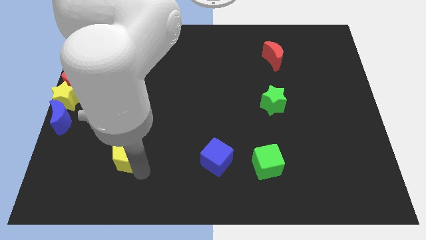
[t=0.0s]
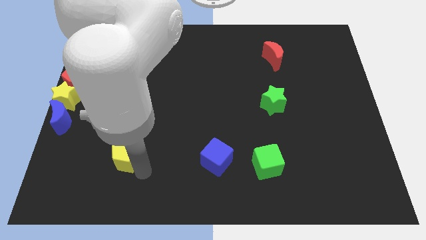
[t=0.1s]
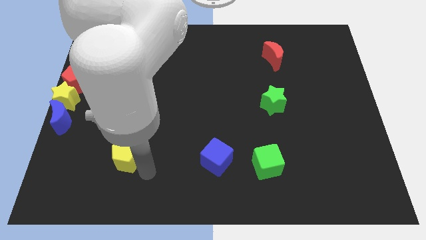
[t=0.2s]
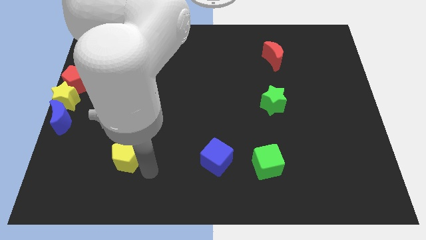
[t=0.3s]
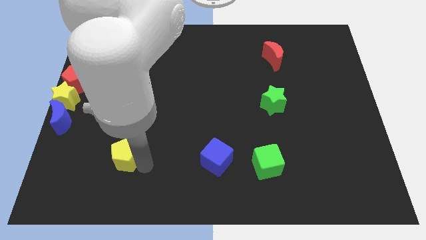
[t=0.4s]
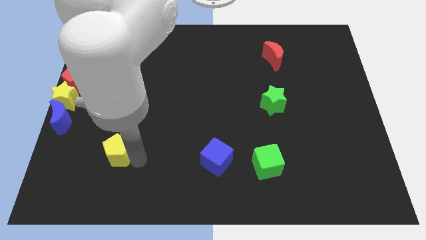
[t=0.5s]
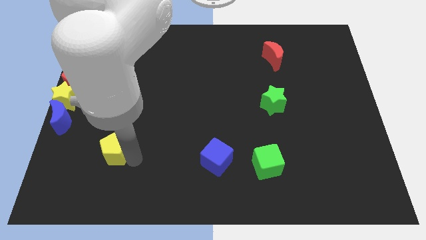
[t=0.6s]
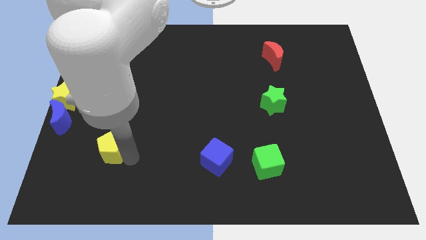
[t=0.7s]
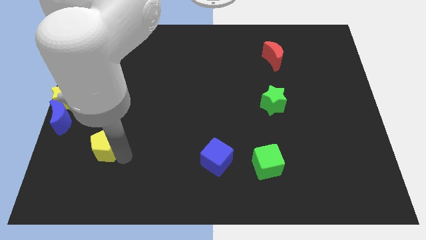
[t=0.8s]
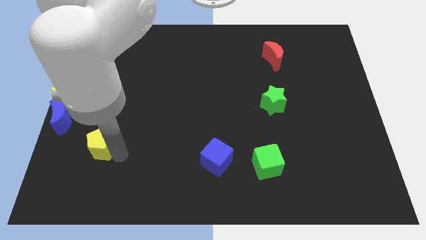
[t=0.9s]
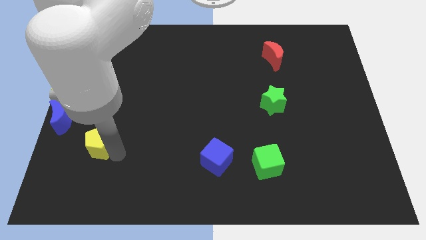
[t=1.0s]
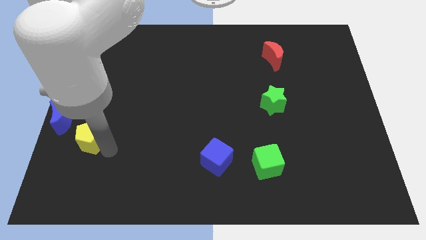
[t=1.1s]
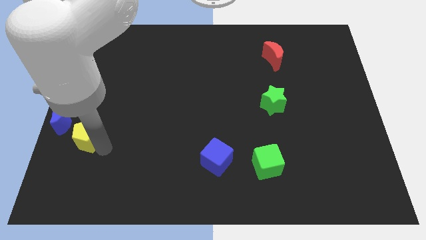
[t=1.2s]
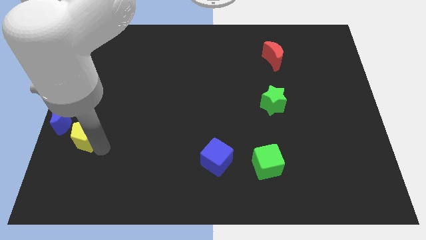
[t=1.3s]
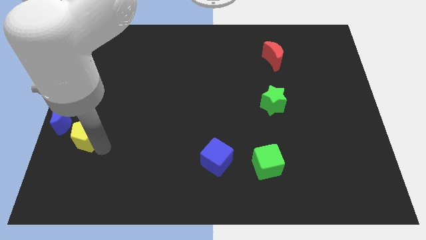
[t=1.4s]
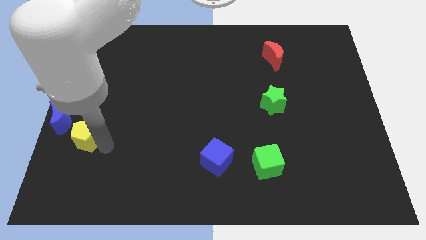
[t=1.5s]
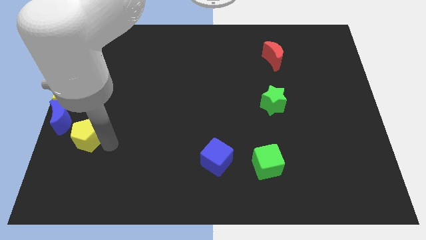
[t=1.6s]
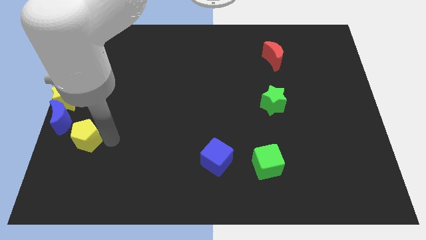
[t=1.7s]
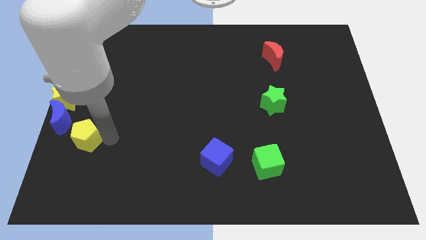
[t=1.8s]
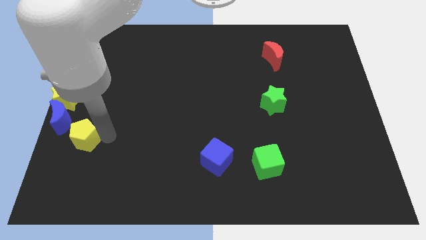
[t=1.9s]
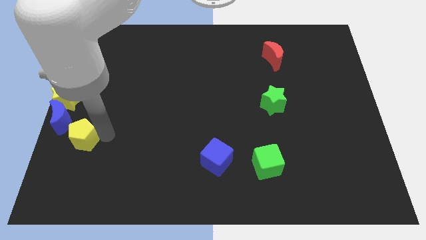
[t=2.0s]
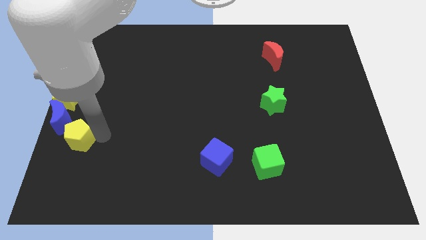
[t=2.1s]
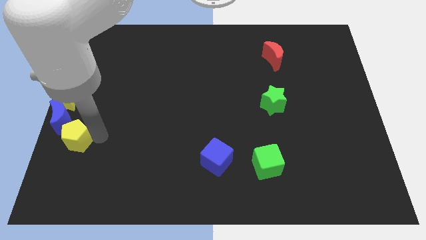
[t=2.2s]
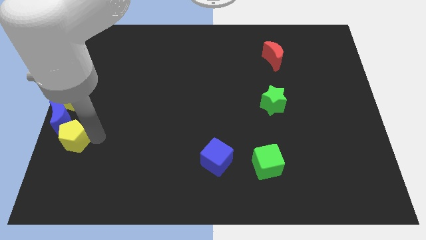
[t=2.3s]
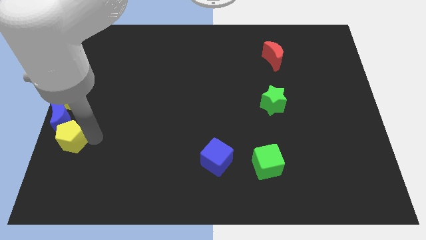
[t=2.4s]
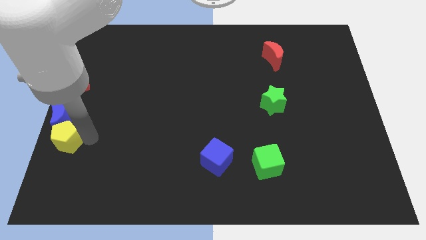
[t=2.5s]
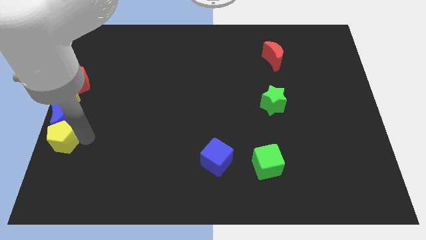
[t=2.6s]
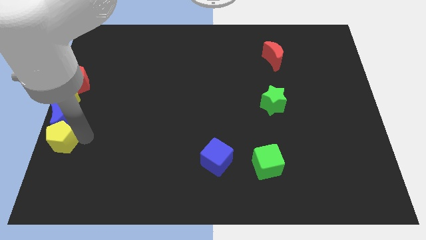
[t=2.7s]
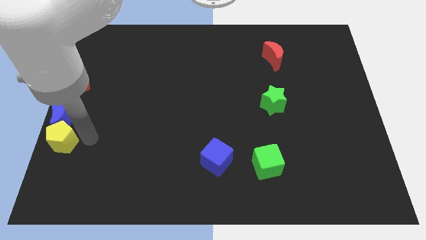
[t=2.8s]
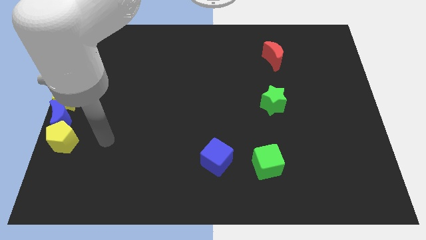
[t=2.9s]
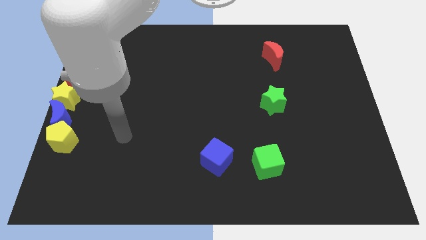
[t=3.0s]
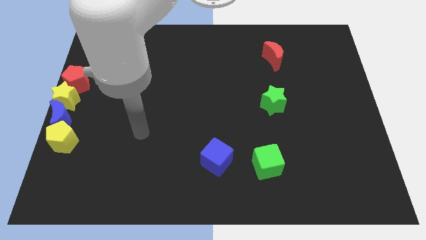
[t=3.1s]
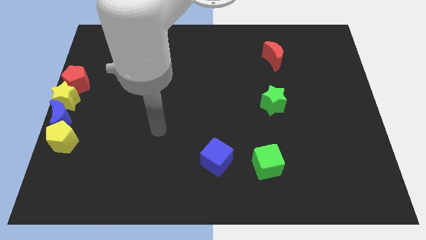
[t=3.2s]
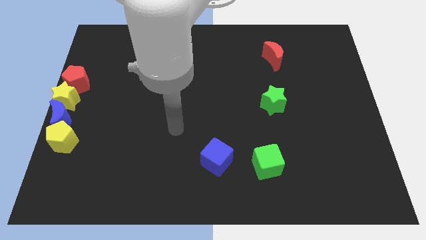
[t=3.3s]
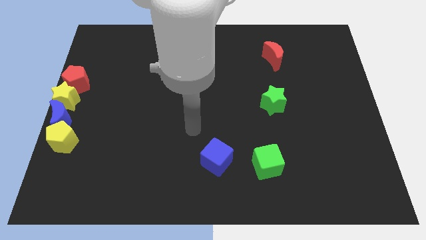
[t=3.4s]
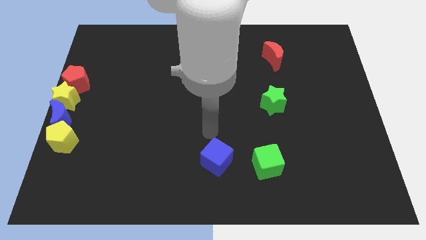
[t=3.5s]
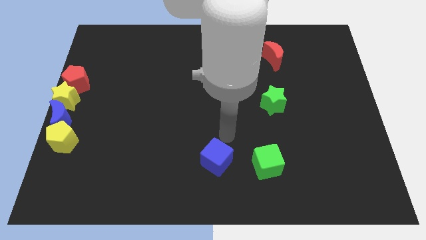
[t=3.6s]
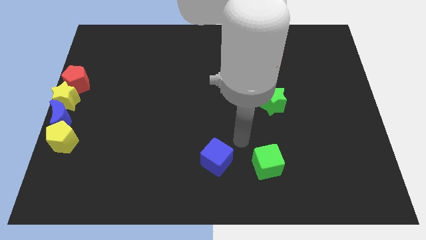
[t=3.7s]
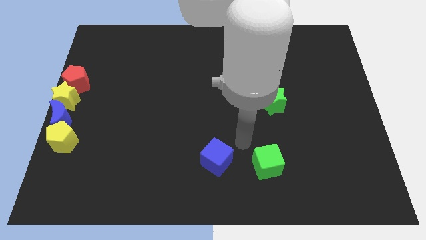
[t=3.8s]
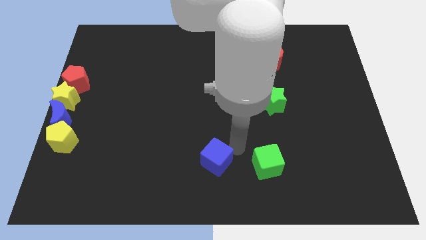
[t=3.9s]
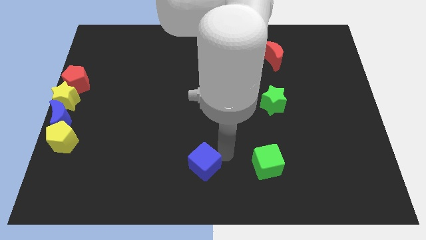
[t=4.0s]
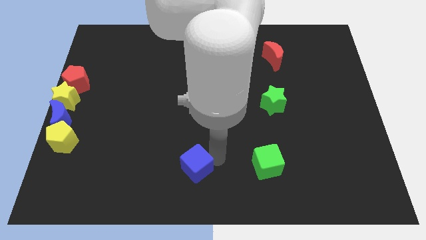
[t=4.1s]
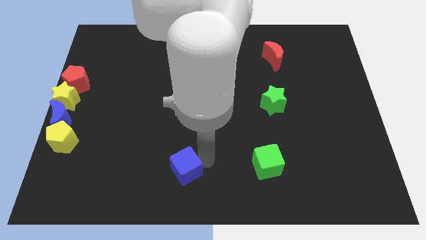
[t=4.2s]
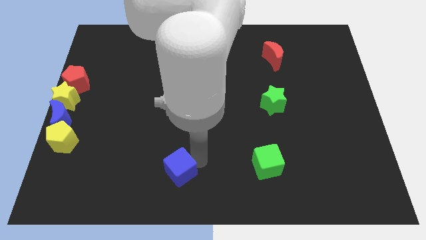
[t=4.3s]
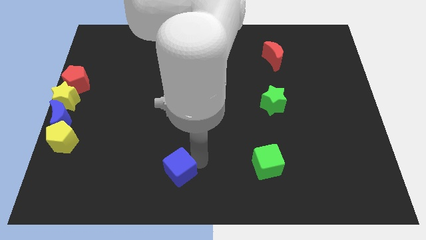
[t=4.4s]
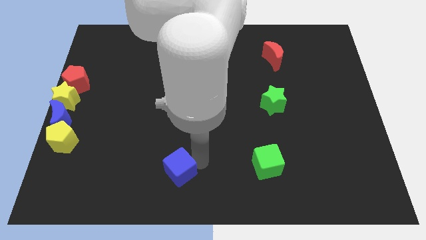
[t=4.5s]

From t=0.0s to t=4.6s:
place the yellow pentagon bottom of the blue crescent

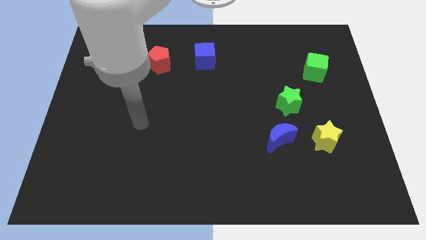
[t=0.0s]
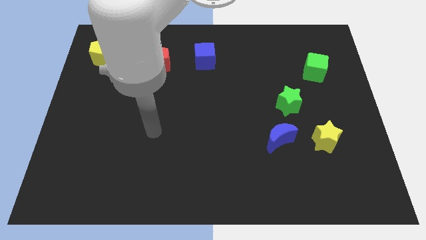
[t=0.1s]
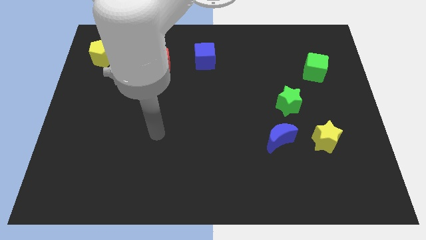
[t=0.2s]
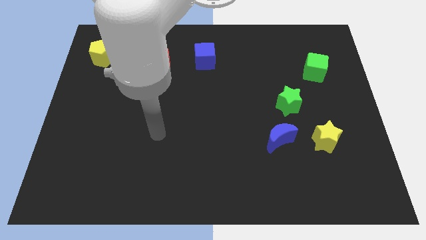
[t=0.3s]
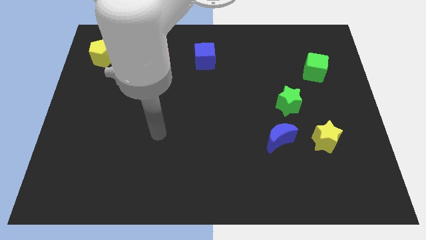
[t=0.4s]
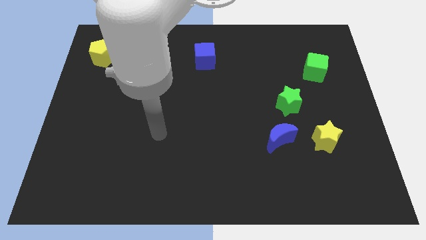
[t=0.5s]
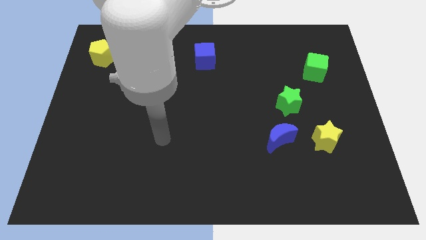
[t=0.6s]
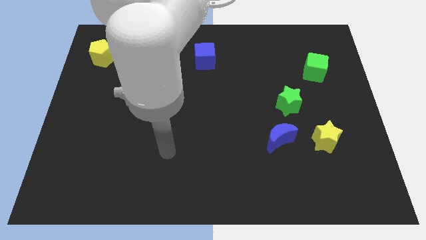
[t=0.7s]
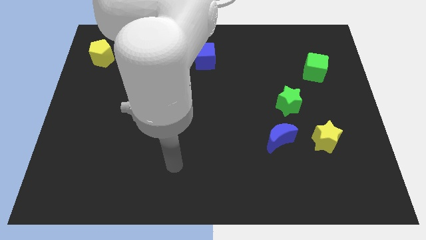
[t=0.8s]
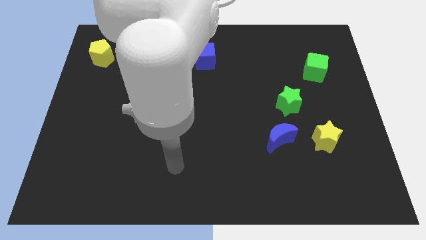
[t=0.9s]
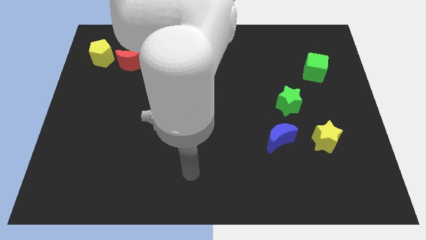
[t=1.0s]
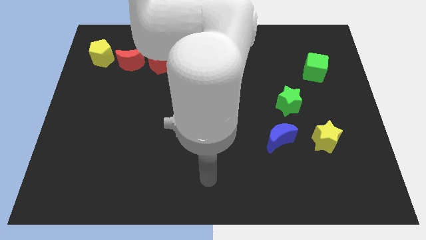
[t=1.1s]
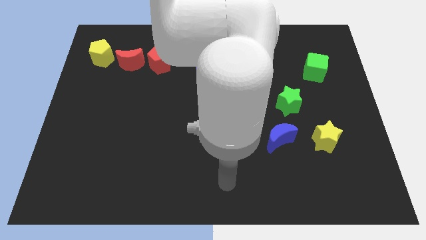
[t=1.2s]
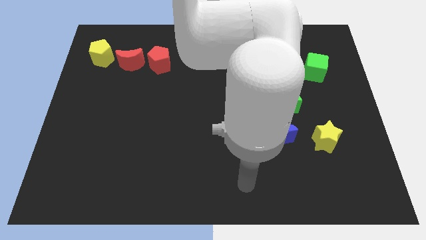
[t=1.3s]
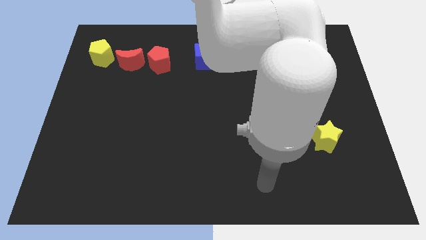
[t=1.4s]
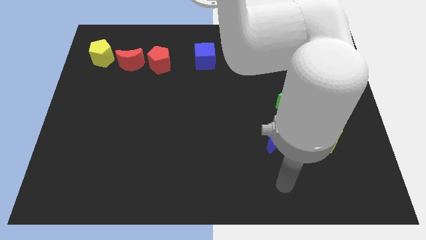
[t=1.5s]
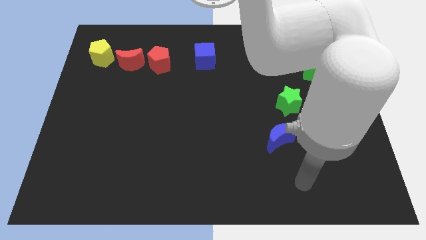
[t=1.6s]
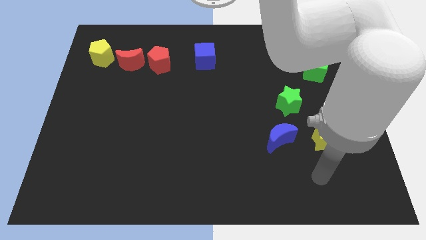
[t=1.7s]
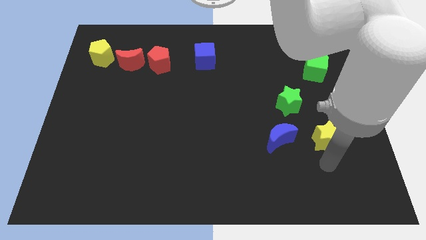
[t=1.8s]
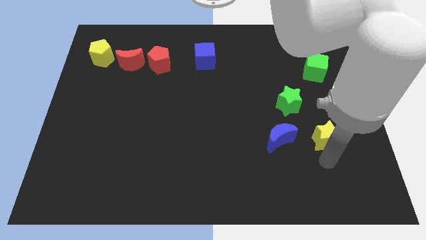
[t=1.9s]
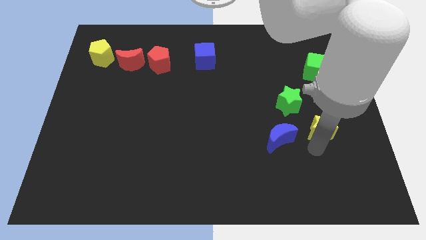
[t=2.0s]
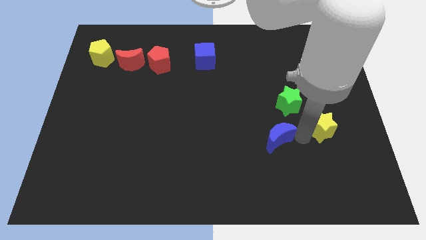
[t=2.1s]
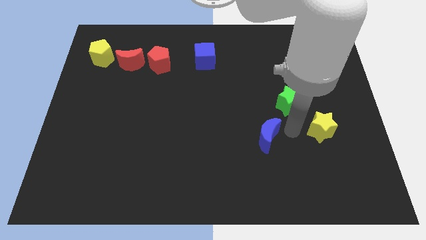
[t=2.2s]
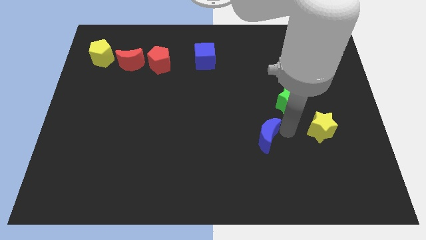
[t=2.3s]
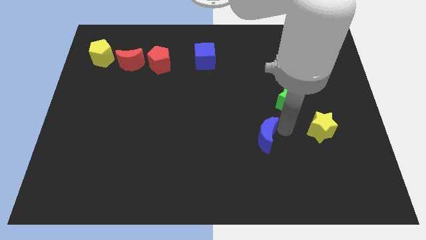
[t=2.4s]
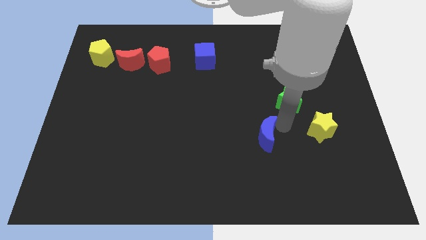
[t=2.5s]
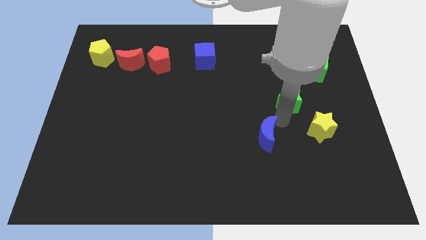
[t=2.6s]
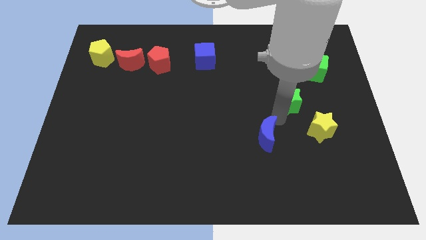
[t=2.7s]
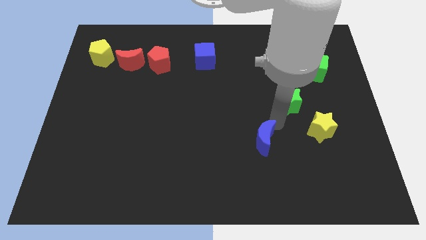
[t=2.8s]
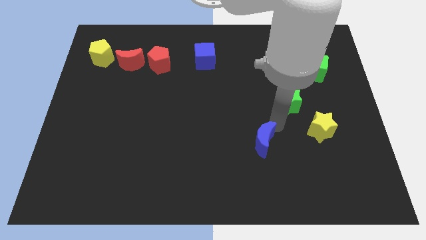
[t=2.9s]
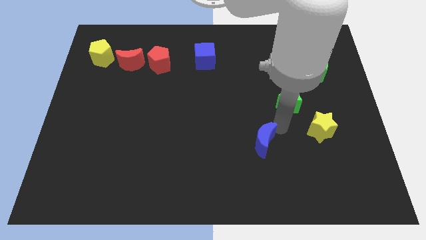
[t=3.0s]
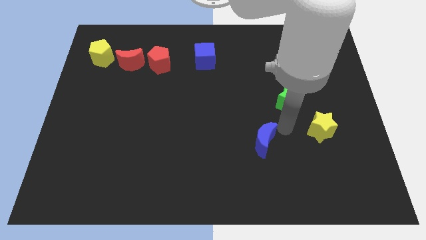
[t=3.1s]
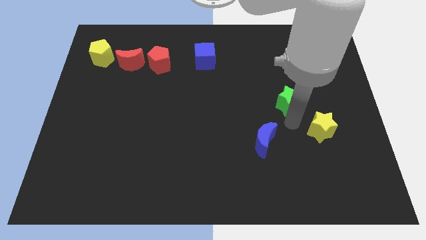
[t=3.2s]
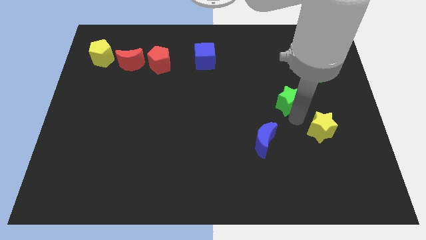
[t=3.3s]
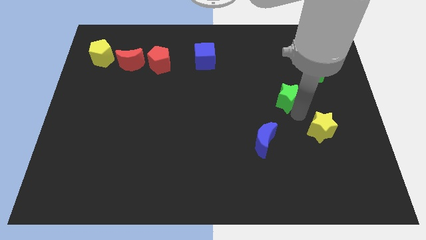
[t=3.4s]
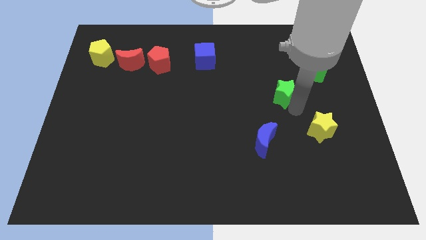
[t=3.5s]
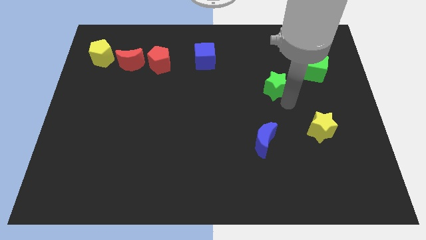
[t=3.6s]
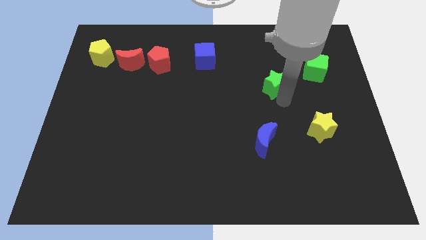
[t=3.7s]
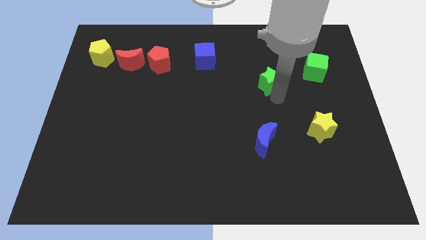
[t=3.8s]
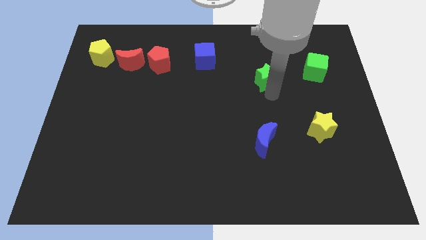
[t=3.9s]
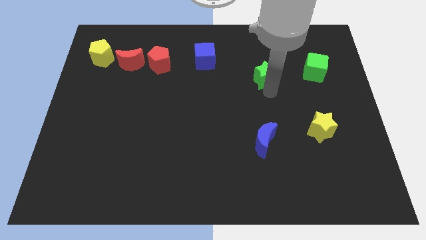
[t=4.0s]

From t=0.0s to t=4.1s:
separate blue moon with green and yellow stars from each other

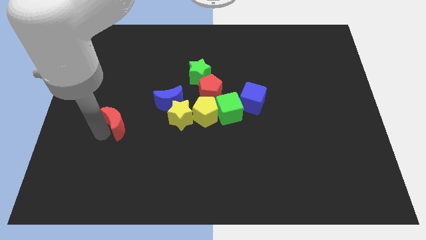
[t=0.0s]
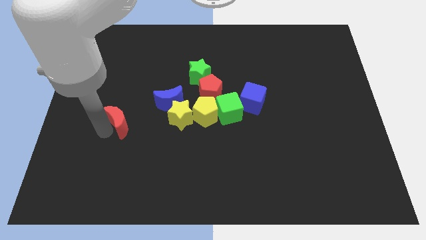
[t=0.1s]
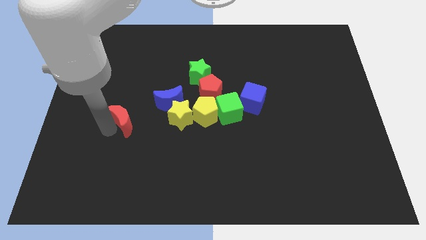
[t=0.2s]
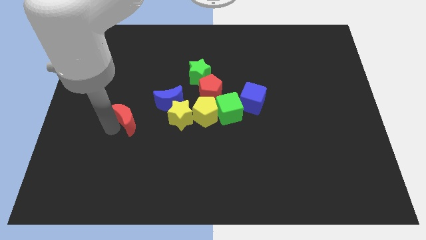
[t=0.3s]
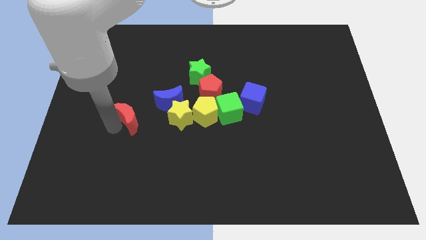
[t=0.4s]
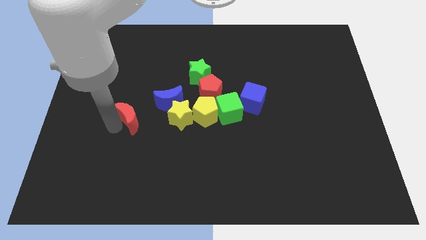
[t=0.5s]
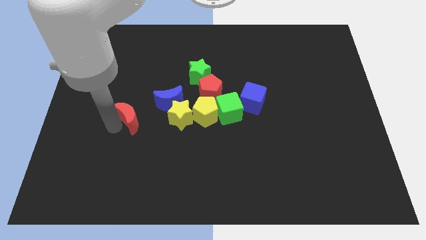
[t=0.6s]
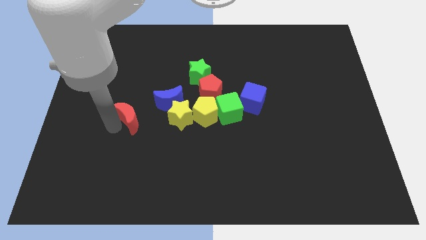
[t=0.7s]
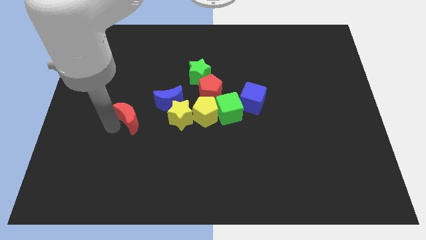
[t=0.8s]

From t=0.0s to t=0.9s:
place the red crescent parallel to the left of the yellow star
